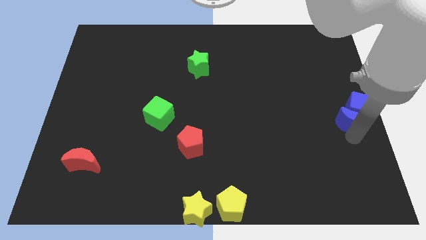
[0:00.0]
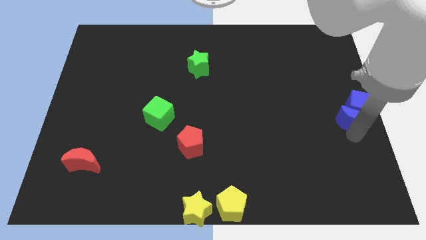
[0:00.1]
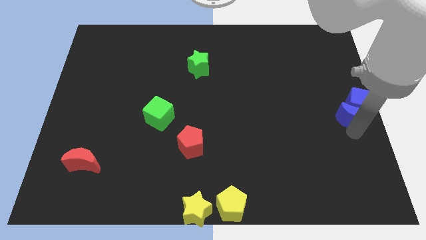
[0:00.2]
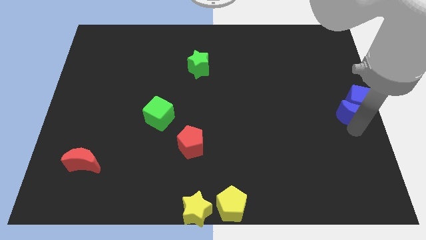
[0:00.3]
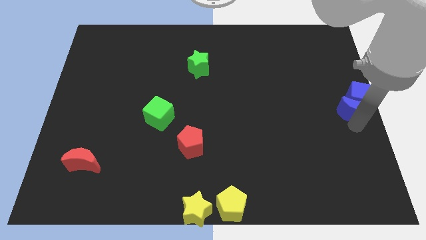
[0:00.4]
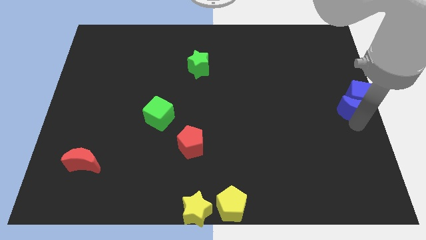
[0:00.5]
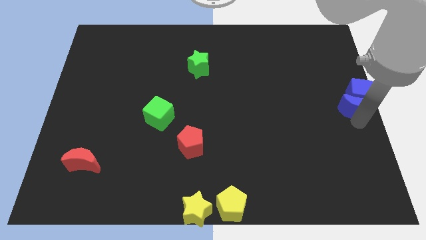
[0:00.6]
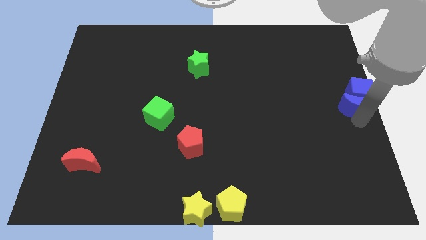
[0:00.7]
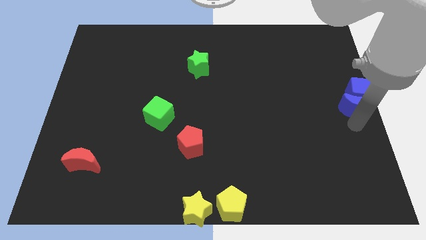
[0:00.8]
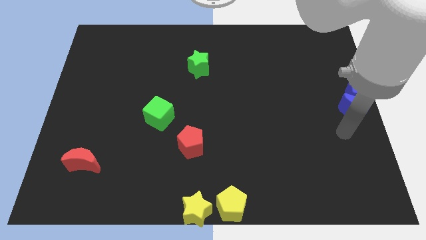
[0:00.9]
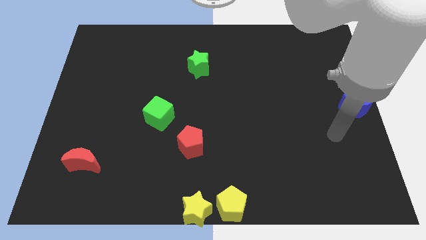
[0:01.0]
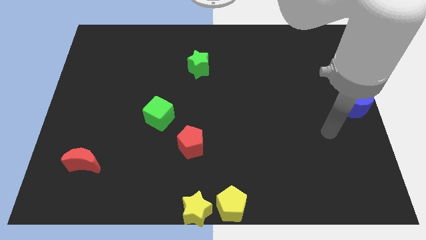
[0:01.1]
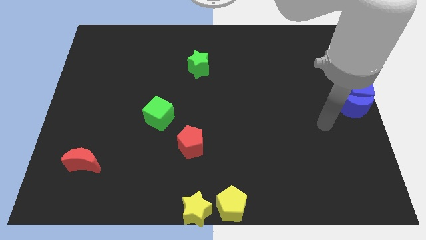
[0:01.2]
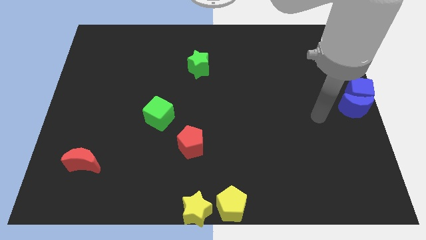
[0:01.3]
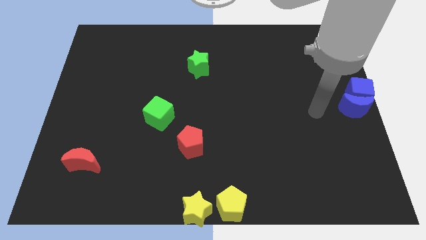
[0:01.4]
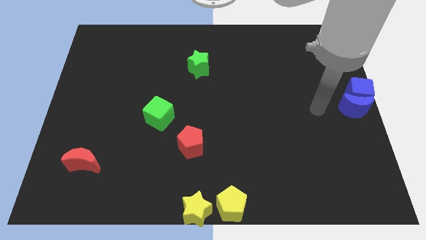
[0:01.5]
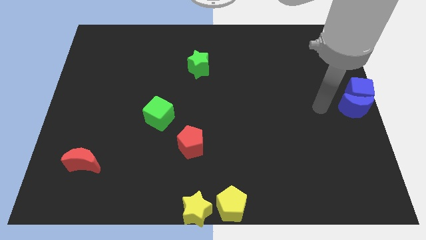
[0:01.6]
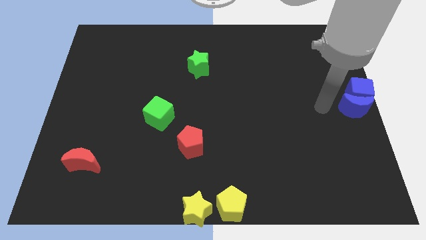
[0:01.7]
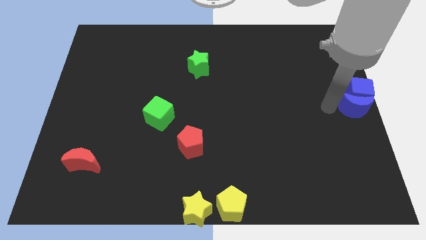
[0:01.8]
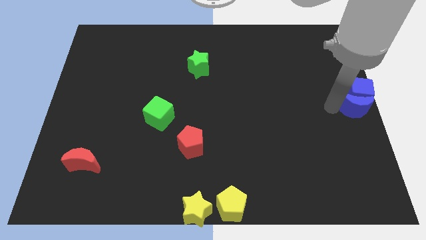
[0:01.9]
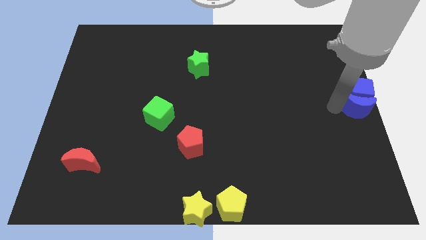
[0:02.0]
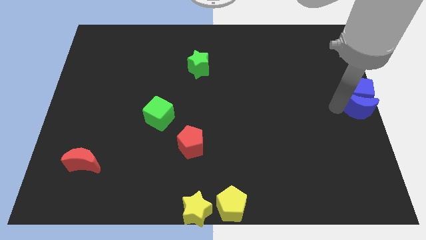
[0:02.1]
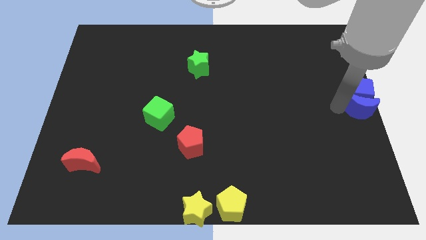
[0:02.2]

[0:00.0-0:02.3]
push the blue crescent to the right center on the board

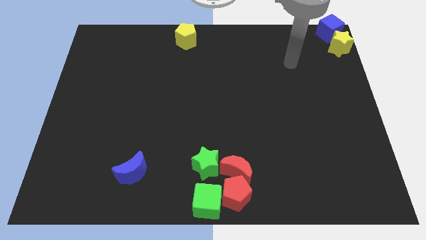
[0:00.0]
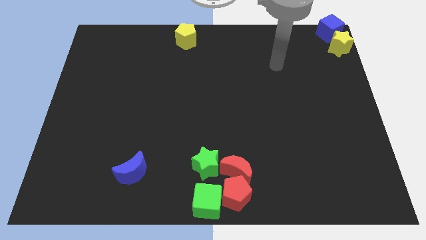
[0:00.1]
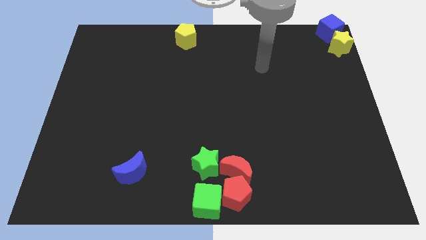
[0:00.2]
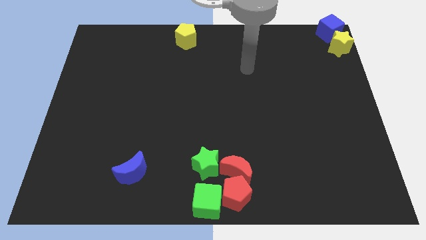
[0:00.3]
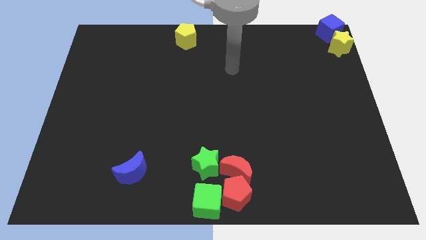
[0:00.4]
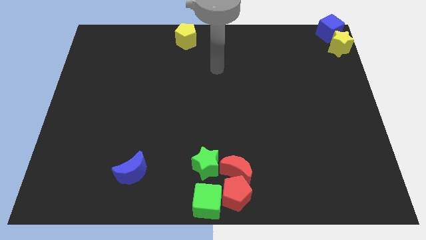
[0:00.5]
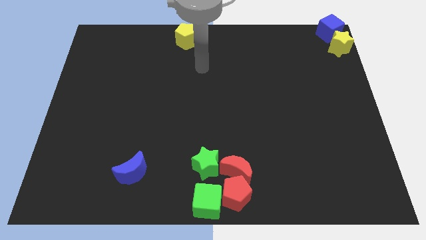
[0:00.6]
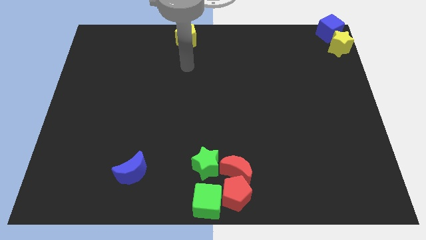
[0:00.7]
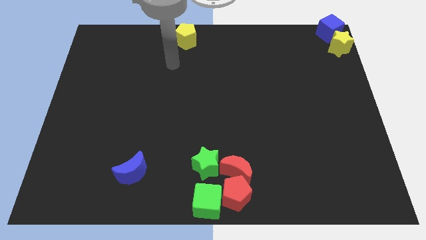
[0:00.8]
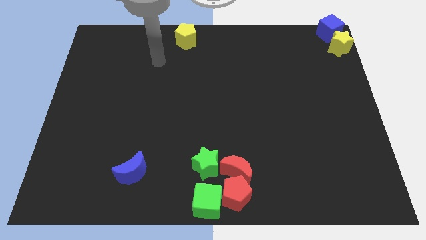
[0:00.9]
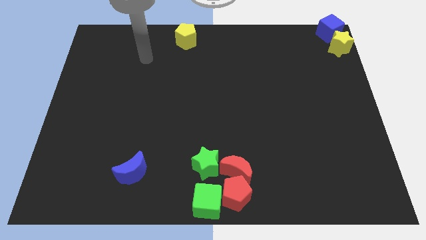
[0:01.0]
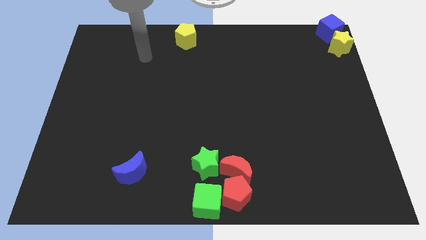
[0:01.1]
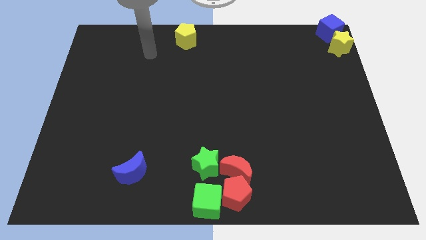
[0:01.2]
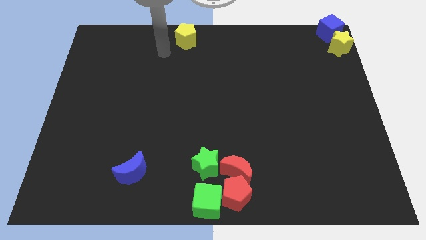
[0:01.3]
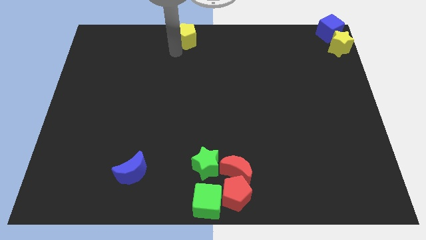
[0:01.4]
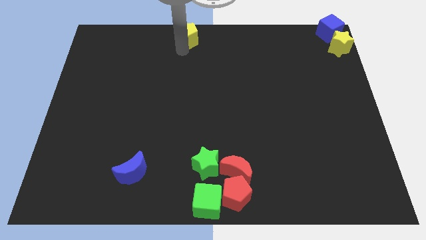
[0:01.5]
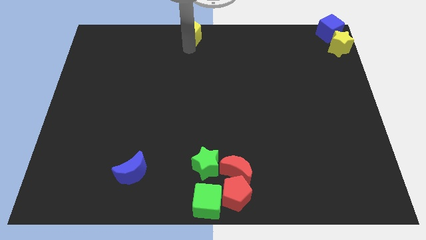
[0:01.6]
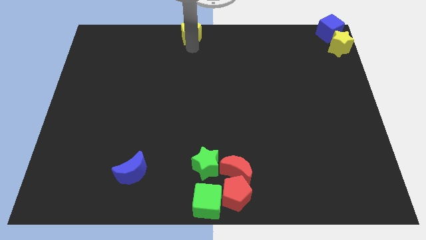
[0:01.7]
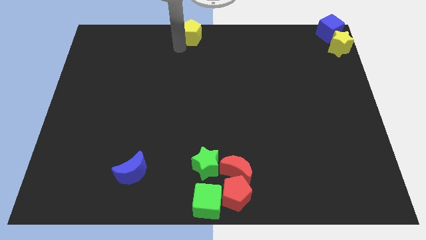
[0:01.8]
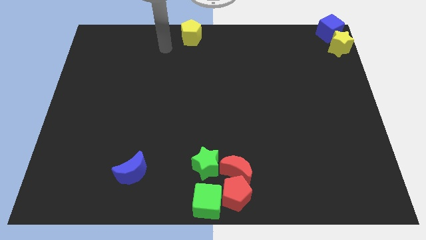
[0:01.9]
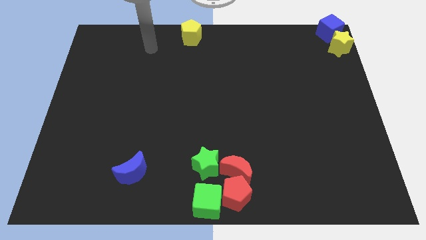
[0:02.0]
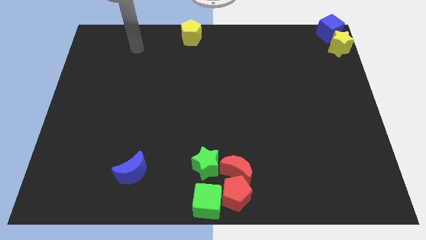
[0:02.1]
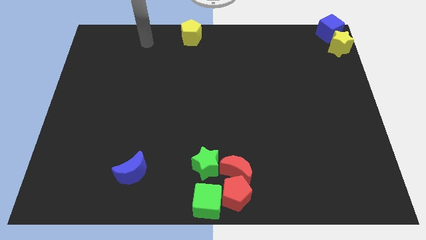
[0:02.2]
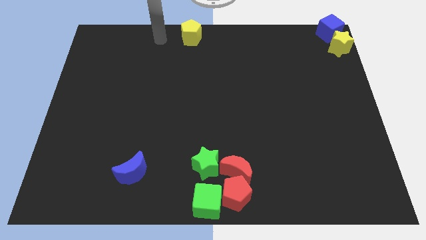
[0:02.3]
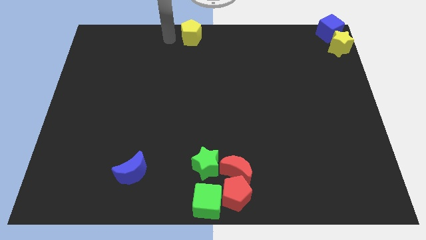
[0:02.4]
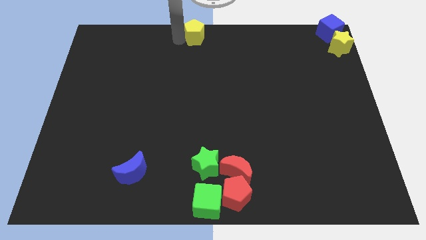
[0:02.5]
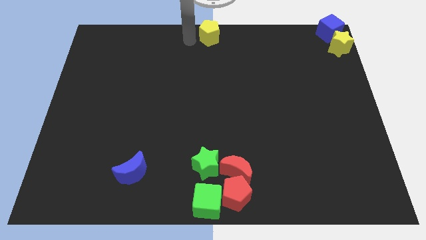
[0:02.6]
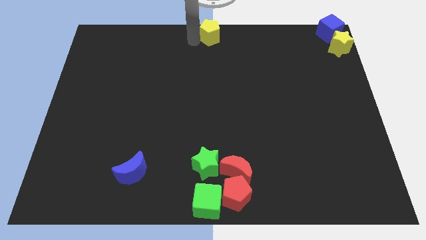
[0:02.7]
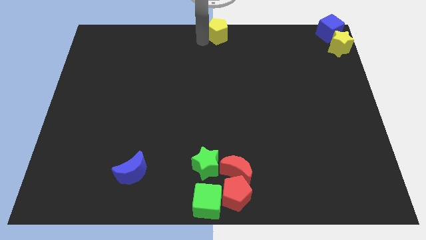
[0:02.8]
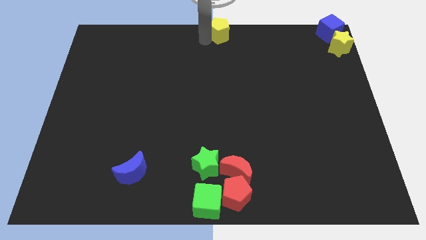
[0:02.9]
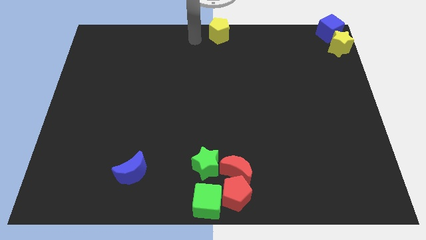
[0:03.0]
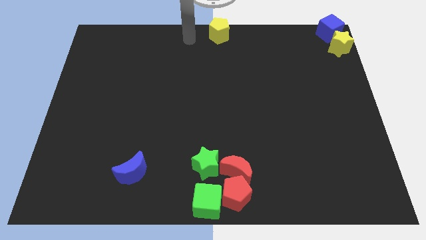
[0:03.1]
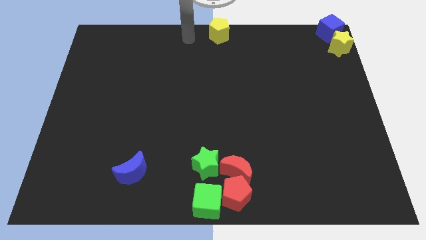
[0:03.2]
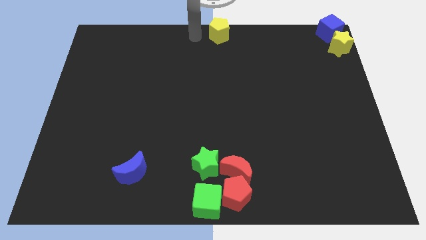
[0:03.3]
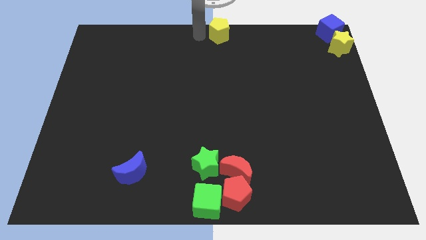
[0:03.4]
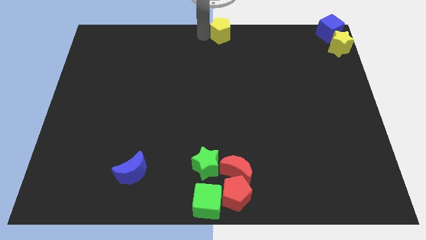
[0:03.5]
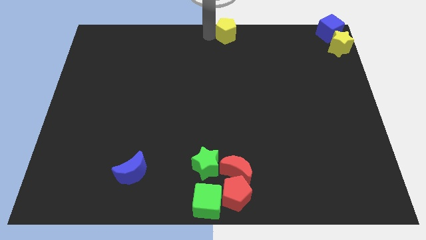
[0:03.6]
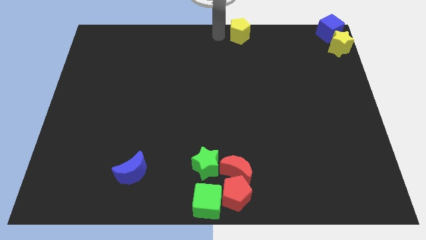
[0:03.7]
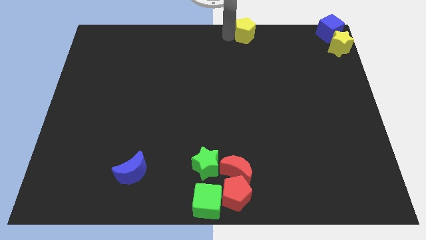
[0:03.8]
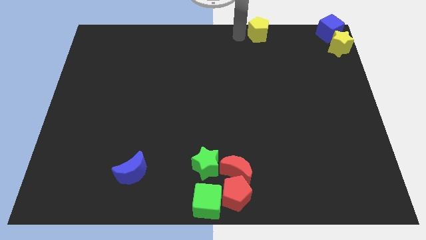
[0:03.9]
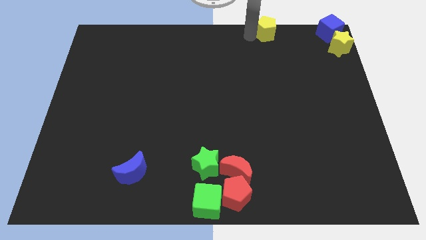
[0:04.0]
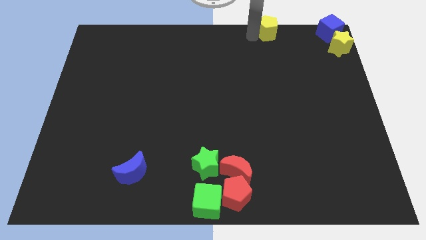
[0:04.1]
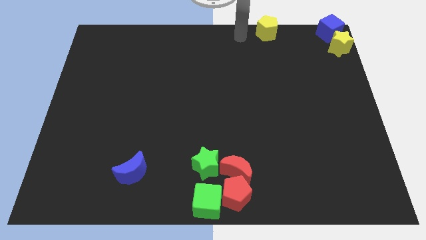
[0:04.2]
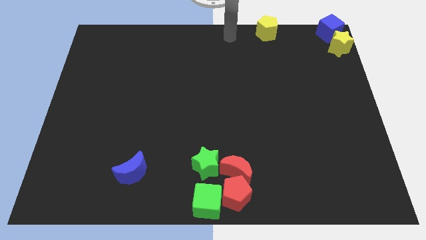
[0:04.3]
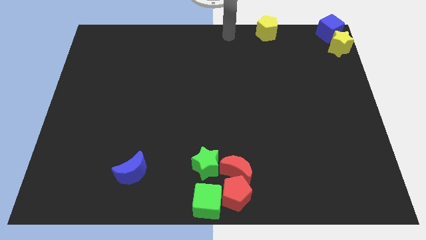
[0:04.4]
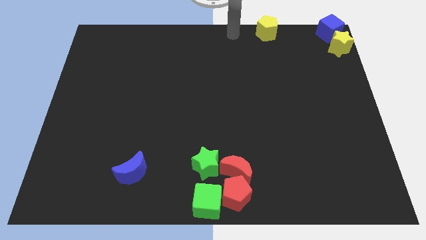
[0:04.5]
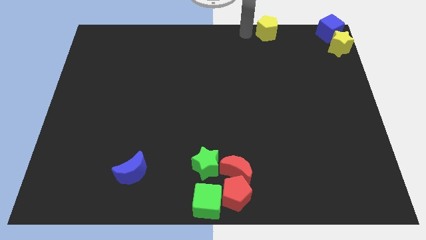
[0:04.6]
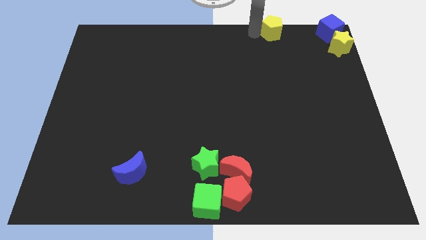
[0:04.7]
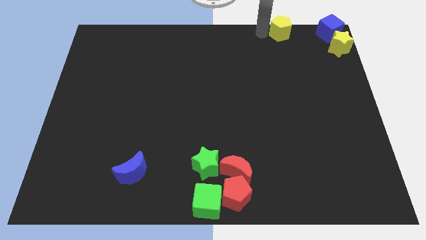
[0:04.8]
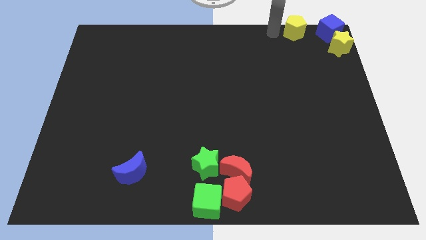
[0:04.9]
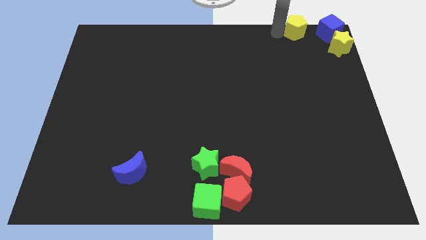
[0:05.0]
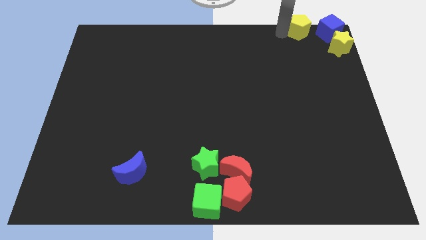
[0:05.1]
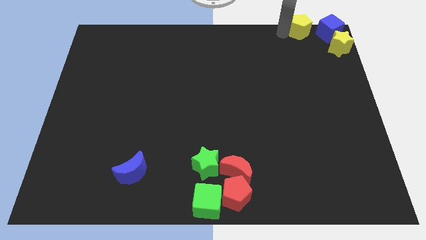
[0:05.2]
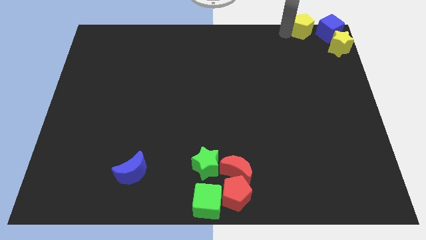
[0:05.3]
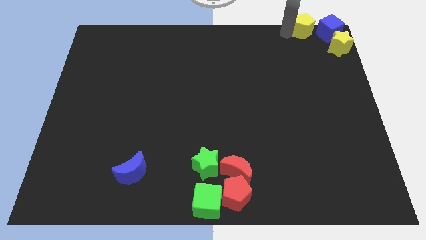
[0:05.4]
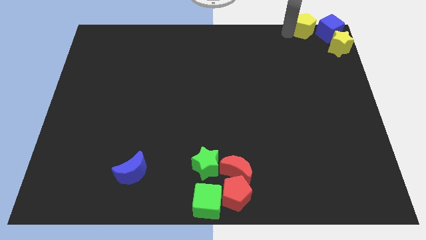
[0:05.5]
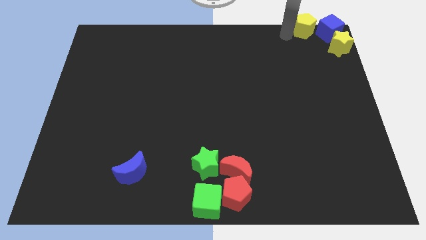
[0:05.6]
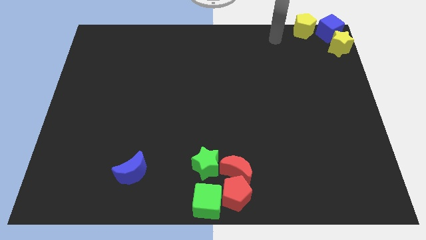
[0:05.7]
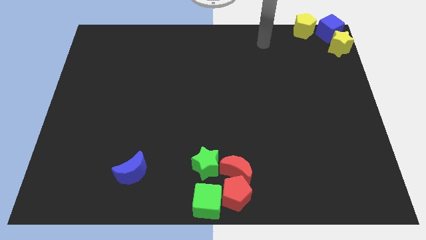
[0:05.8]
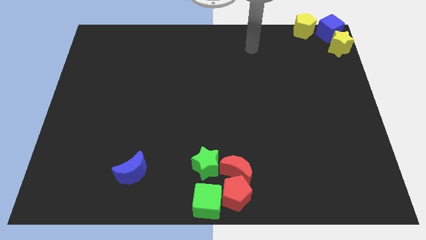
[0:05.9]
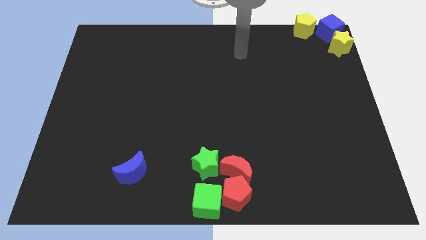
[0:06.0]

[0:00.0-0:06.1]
push the yellow pentagon into the blue cube

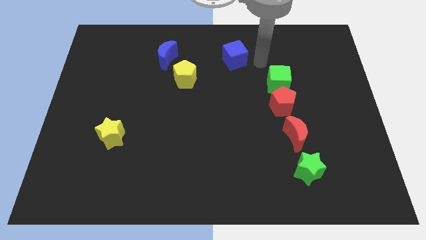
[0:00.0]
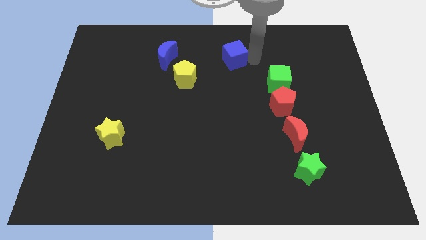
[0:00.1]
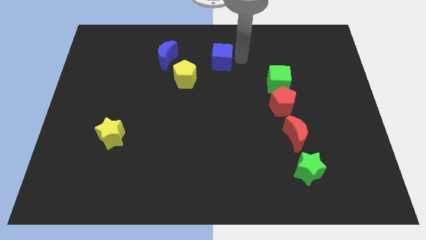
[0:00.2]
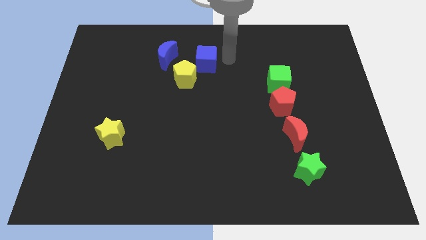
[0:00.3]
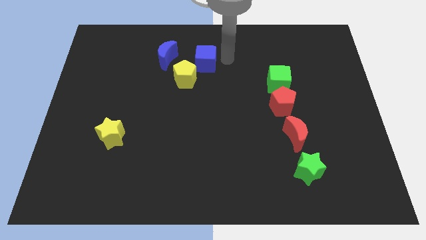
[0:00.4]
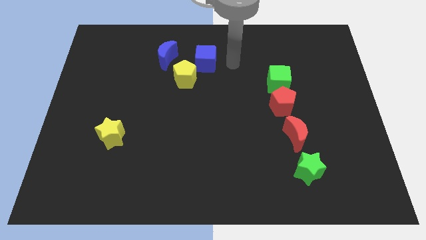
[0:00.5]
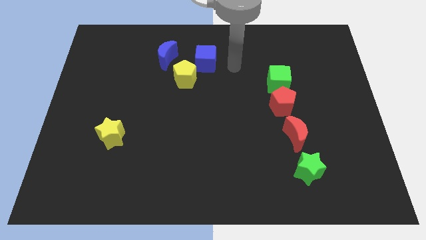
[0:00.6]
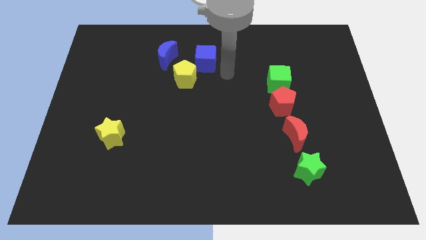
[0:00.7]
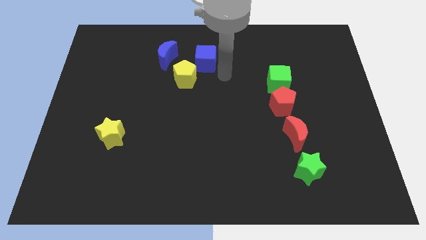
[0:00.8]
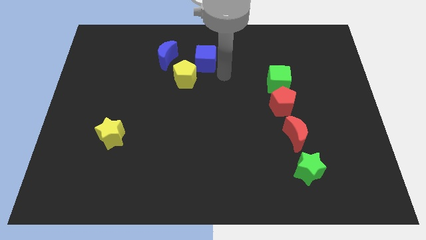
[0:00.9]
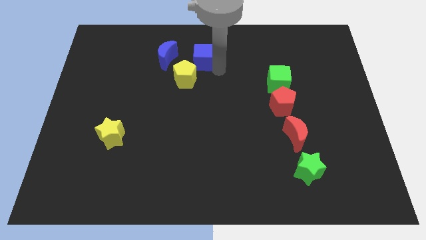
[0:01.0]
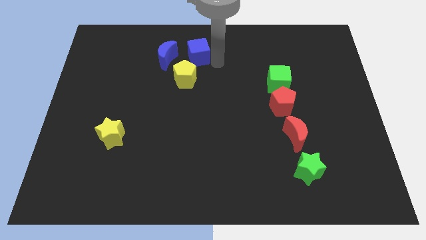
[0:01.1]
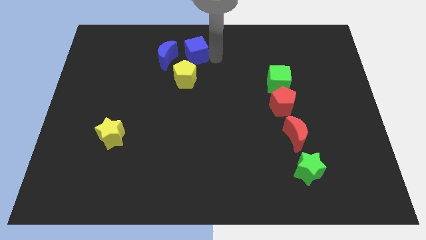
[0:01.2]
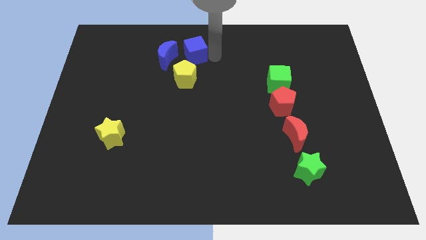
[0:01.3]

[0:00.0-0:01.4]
place blue cube above the yellow pentagon
